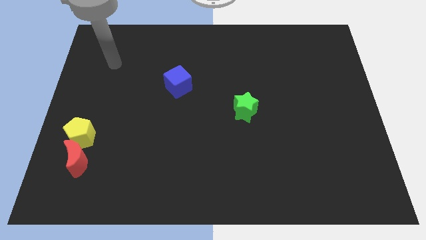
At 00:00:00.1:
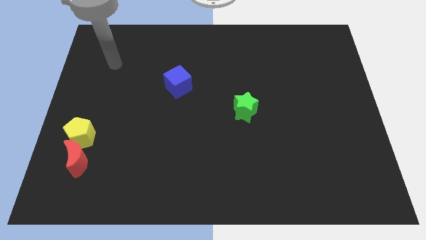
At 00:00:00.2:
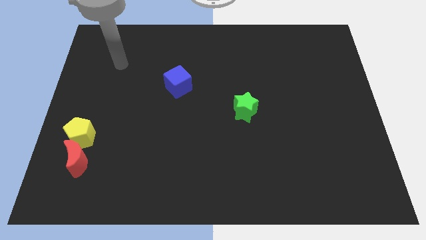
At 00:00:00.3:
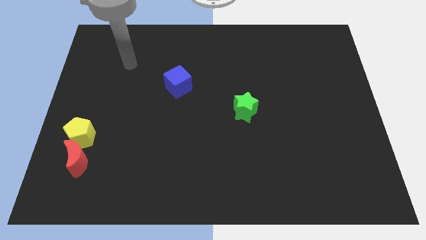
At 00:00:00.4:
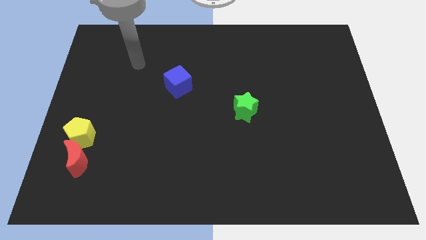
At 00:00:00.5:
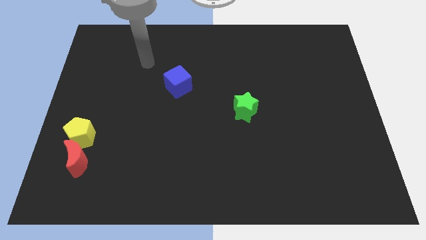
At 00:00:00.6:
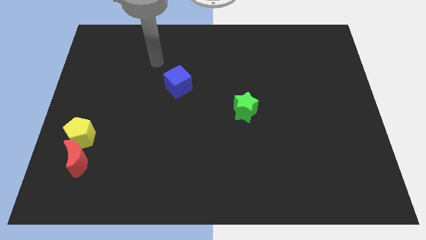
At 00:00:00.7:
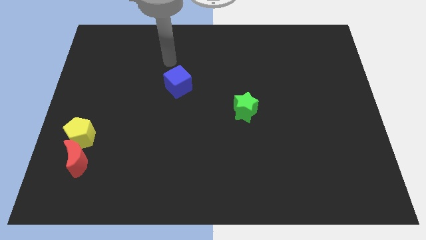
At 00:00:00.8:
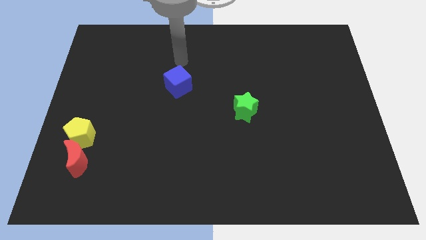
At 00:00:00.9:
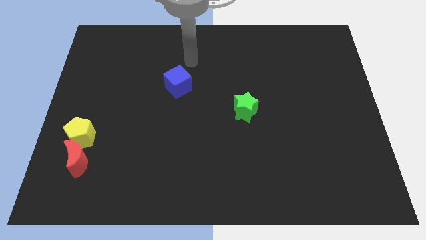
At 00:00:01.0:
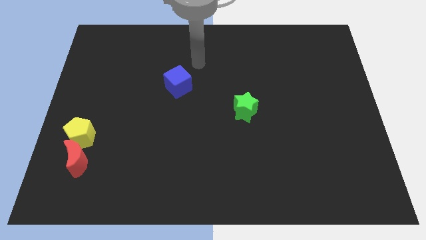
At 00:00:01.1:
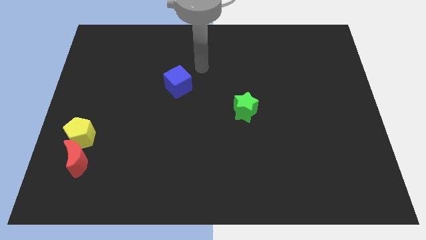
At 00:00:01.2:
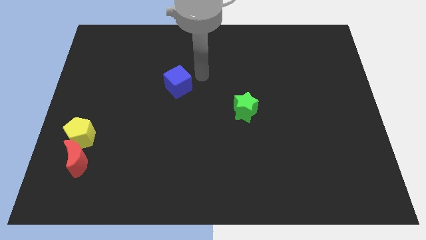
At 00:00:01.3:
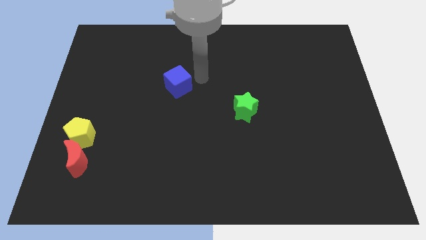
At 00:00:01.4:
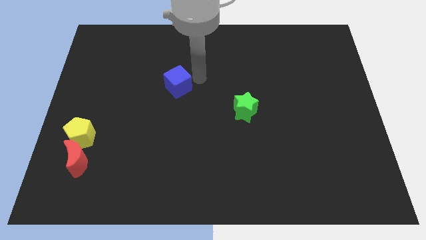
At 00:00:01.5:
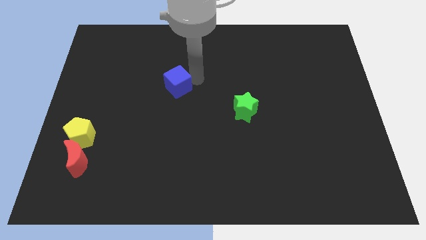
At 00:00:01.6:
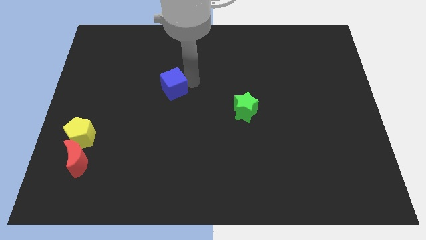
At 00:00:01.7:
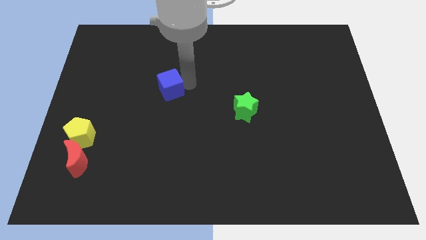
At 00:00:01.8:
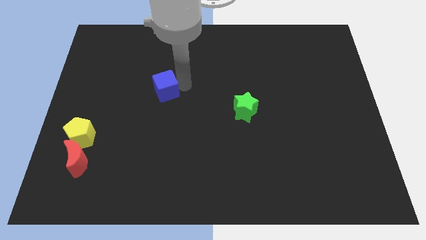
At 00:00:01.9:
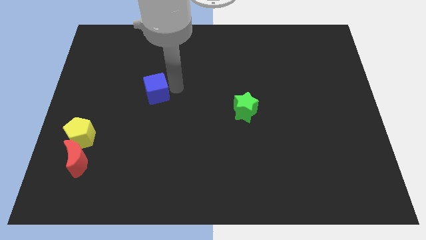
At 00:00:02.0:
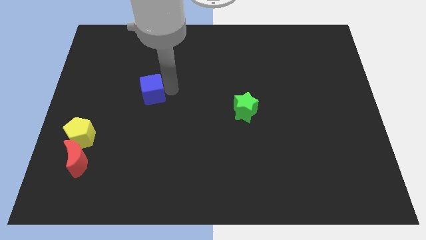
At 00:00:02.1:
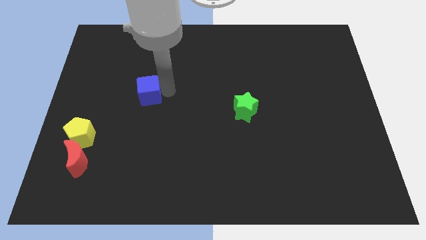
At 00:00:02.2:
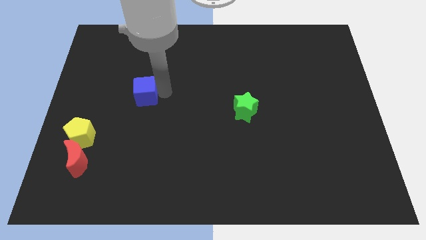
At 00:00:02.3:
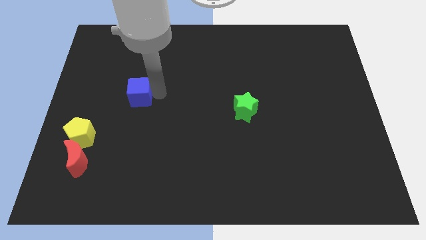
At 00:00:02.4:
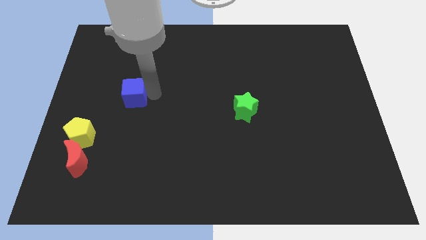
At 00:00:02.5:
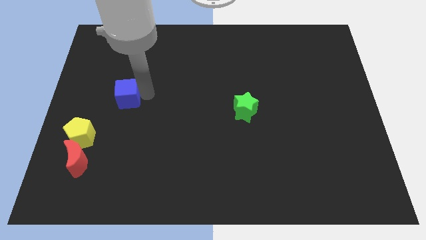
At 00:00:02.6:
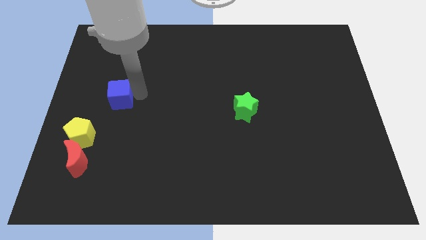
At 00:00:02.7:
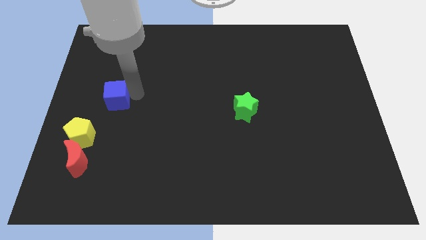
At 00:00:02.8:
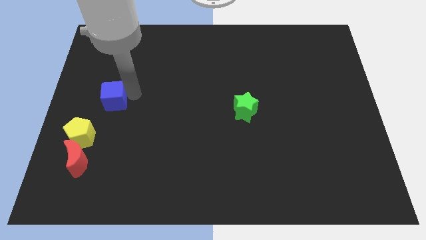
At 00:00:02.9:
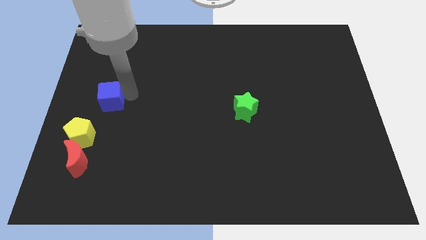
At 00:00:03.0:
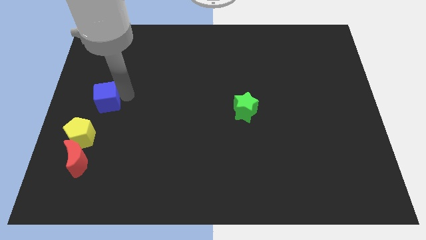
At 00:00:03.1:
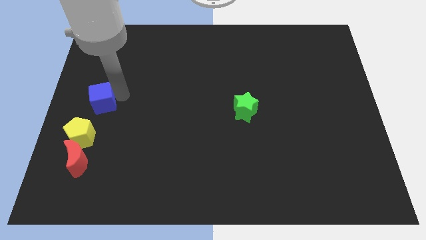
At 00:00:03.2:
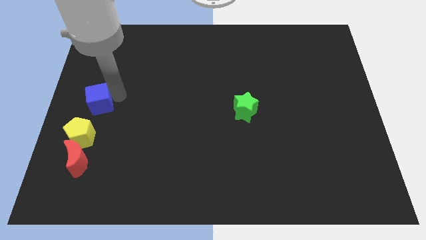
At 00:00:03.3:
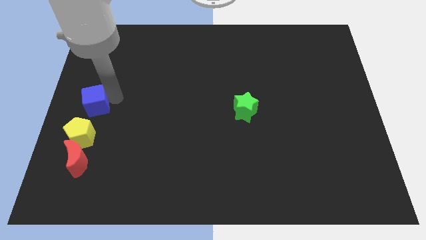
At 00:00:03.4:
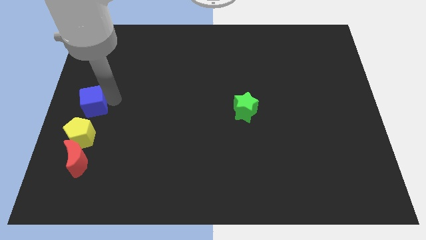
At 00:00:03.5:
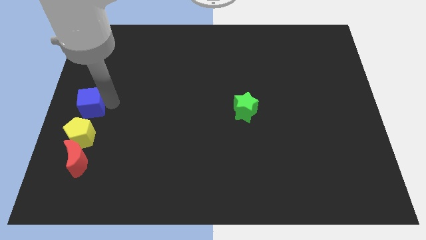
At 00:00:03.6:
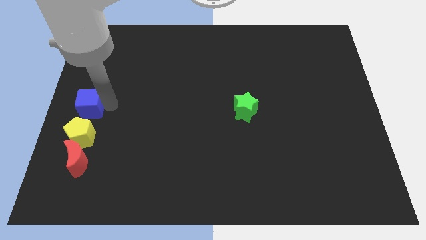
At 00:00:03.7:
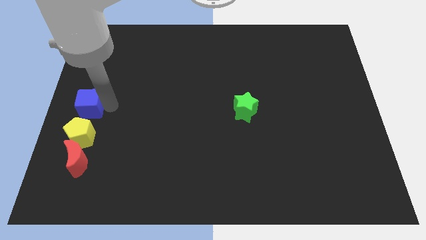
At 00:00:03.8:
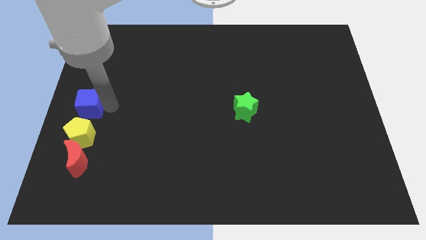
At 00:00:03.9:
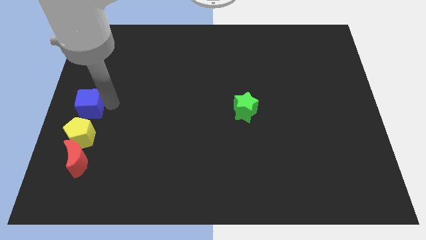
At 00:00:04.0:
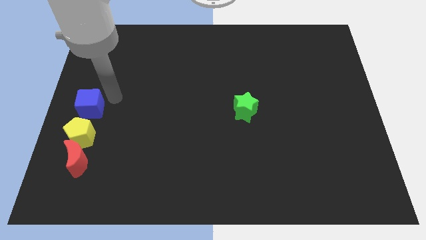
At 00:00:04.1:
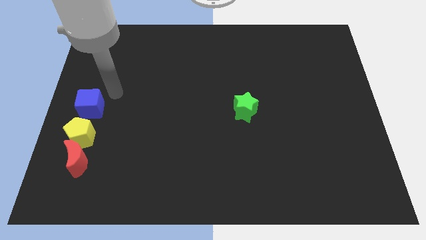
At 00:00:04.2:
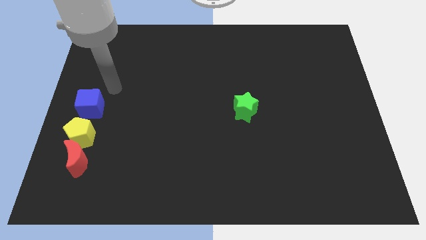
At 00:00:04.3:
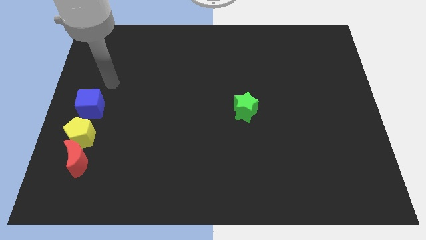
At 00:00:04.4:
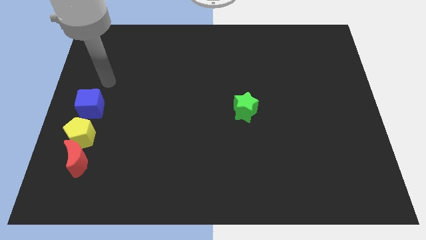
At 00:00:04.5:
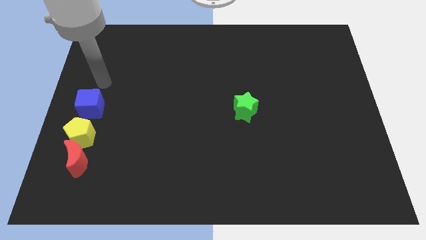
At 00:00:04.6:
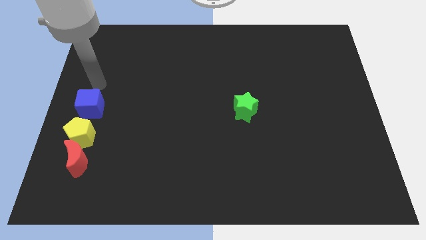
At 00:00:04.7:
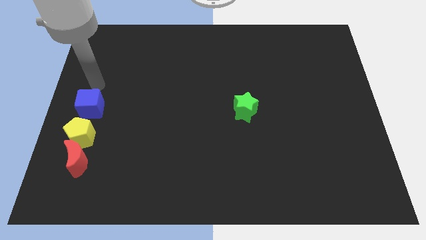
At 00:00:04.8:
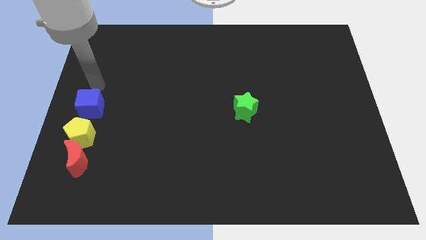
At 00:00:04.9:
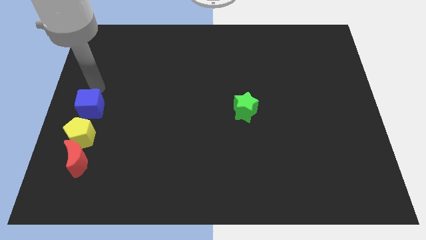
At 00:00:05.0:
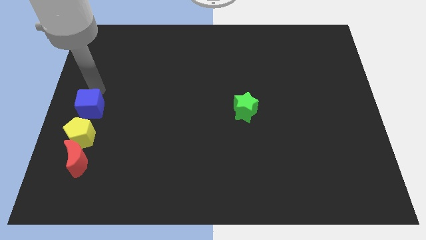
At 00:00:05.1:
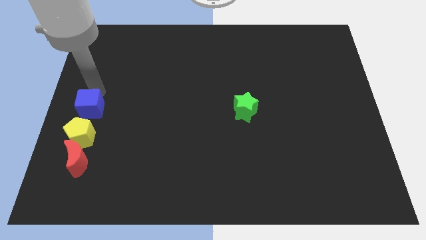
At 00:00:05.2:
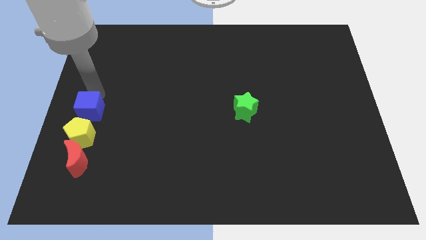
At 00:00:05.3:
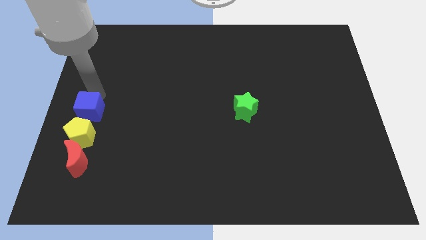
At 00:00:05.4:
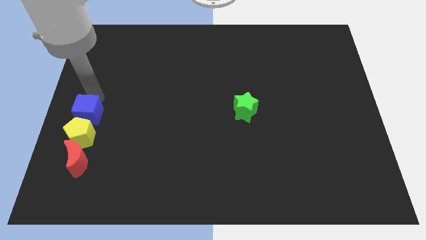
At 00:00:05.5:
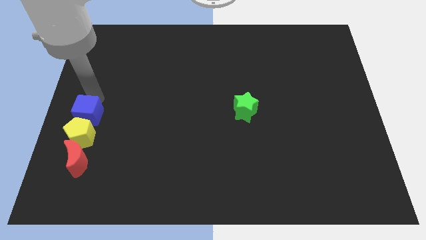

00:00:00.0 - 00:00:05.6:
put the blue cube towards the yellow pentagon

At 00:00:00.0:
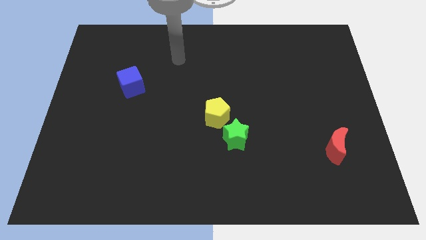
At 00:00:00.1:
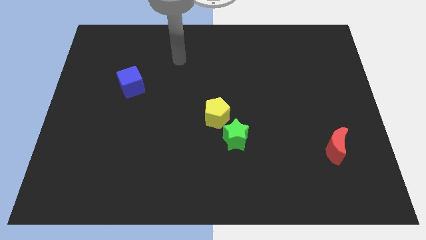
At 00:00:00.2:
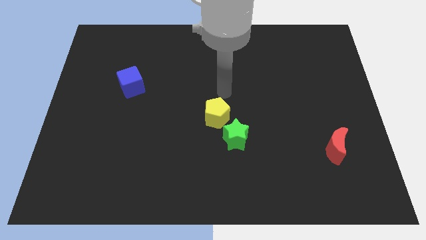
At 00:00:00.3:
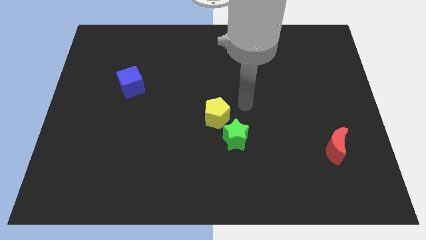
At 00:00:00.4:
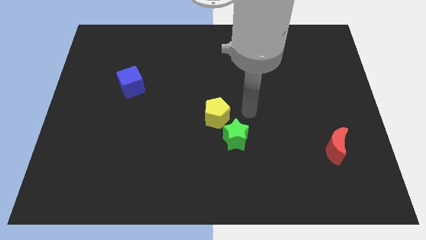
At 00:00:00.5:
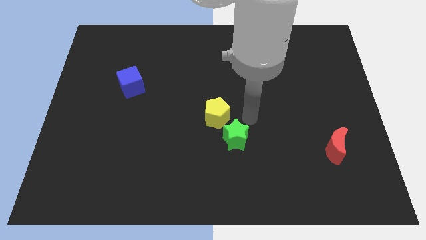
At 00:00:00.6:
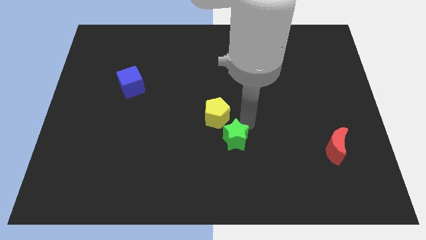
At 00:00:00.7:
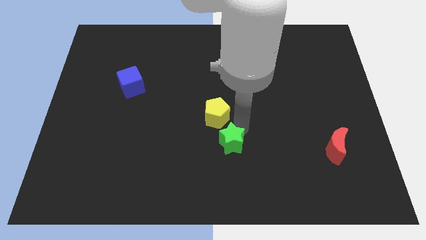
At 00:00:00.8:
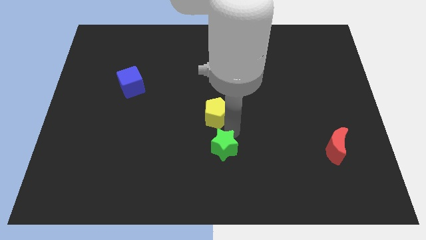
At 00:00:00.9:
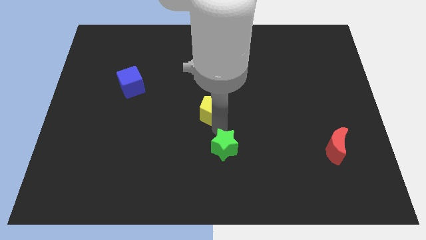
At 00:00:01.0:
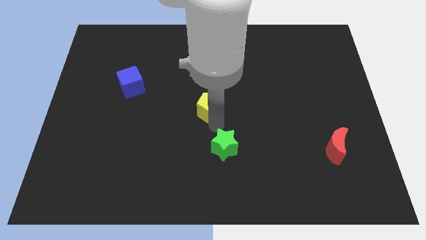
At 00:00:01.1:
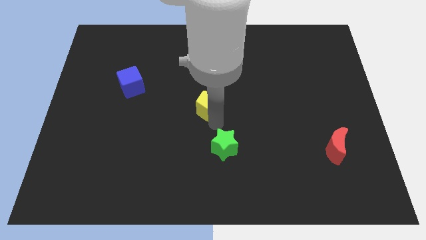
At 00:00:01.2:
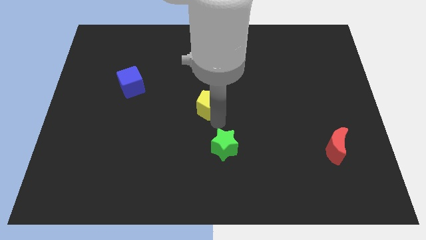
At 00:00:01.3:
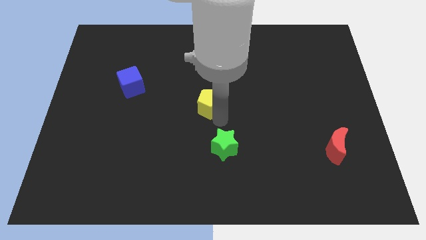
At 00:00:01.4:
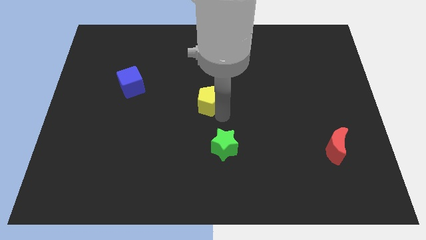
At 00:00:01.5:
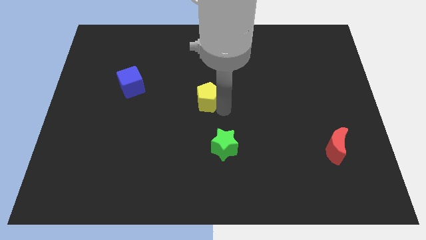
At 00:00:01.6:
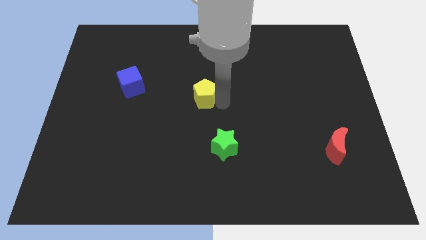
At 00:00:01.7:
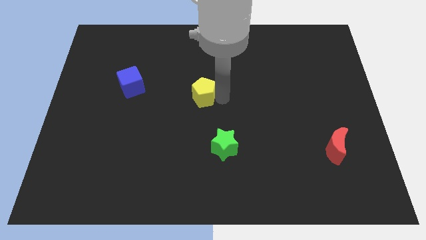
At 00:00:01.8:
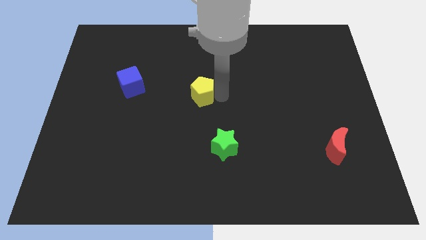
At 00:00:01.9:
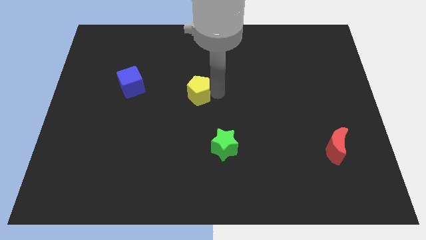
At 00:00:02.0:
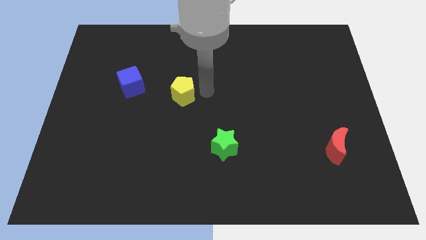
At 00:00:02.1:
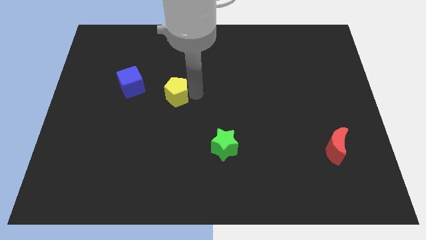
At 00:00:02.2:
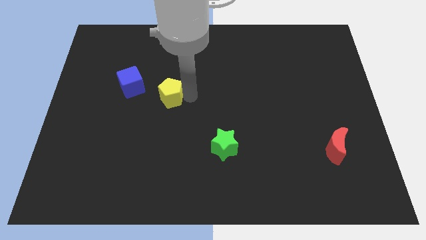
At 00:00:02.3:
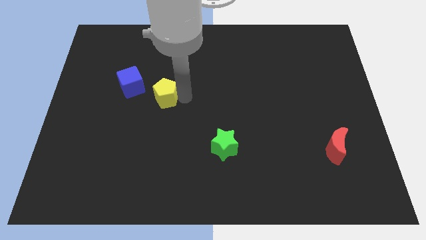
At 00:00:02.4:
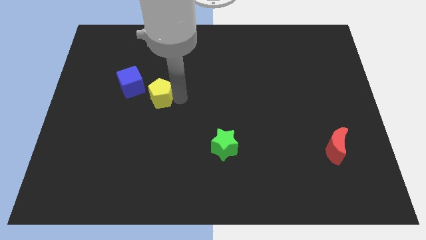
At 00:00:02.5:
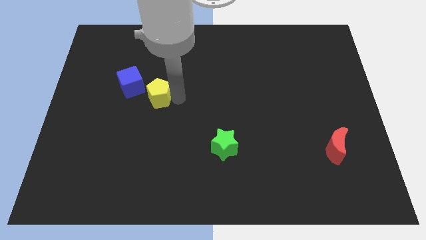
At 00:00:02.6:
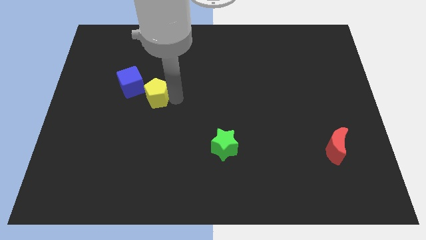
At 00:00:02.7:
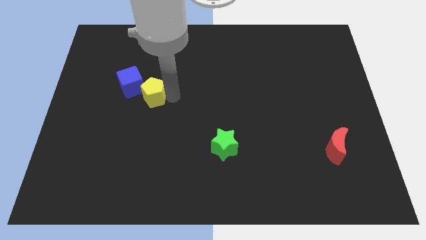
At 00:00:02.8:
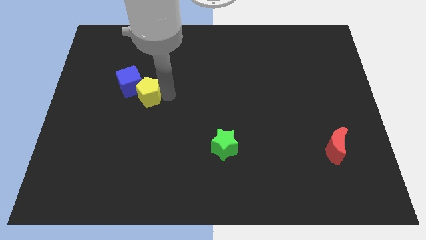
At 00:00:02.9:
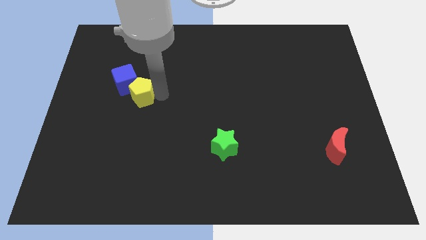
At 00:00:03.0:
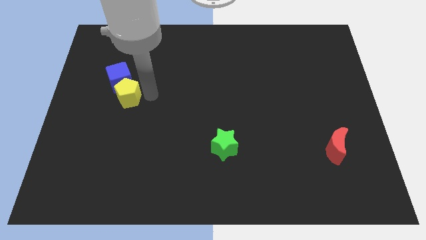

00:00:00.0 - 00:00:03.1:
put the yellow block towards the blue block
